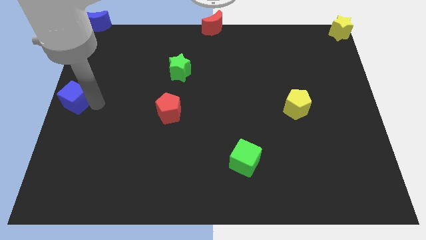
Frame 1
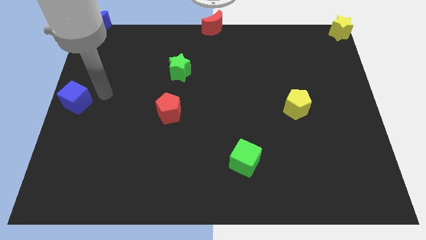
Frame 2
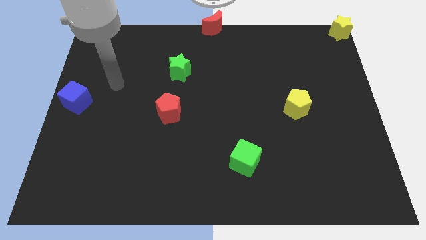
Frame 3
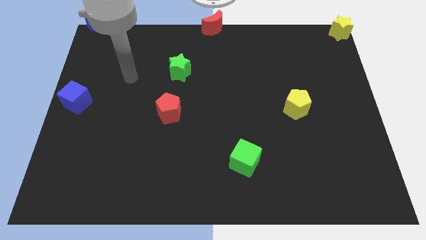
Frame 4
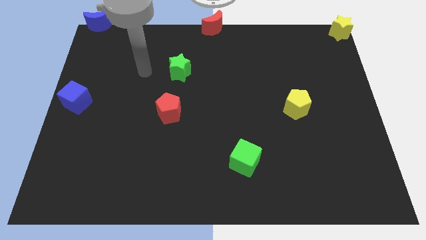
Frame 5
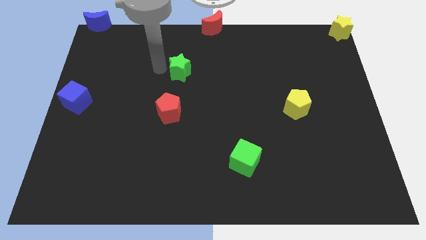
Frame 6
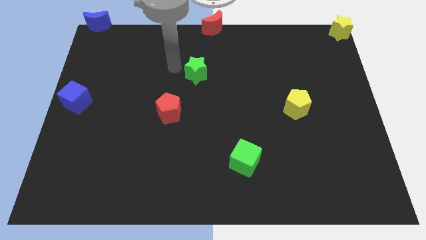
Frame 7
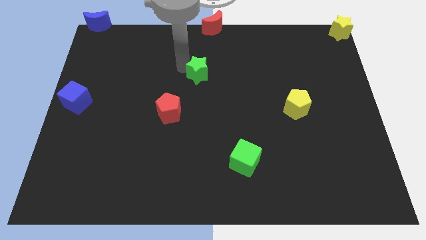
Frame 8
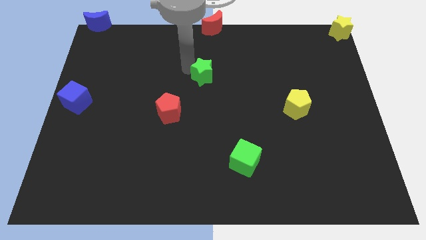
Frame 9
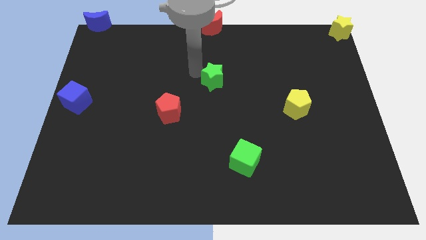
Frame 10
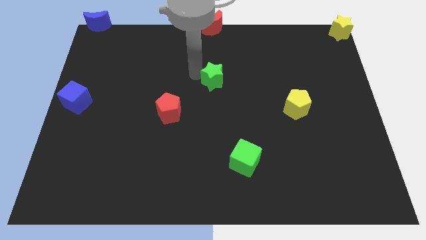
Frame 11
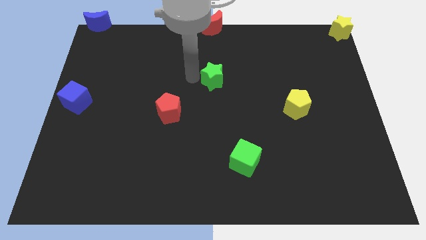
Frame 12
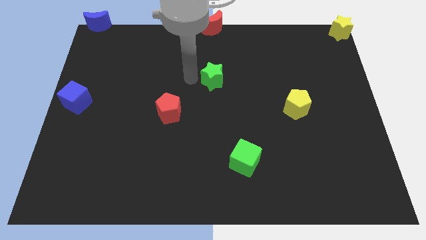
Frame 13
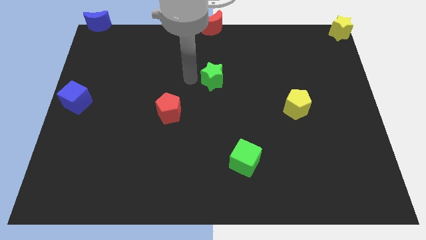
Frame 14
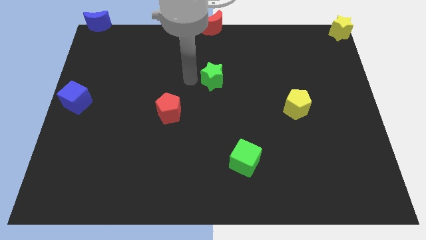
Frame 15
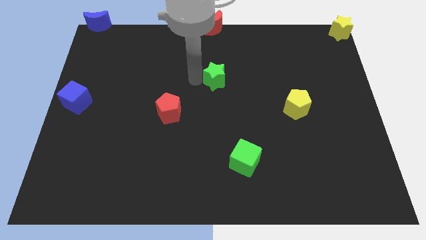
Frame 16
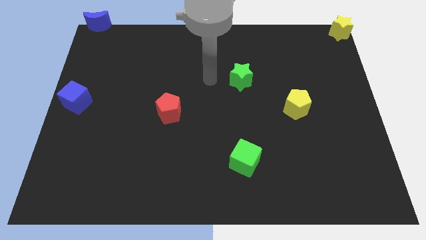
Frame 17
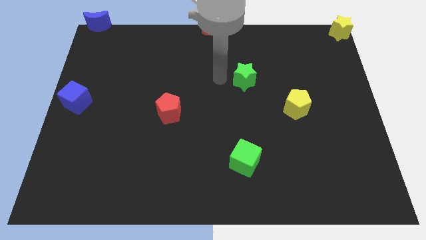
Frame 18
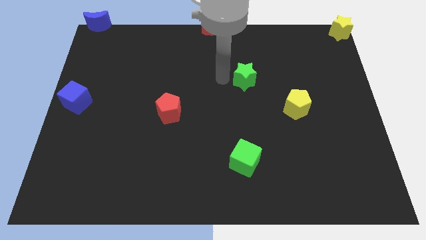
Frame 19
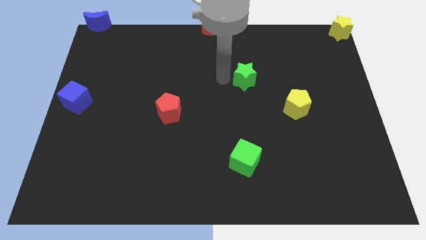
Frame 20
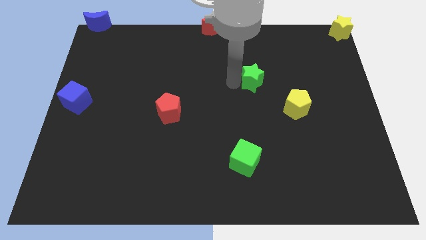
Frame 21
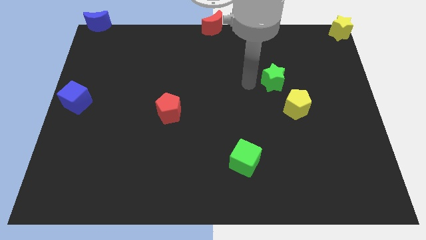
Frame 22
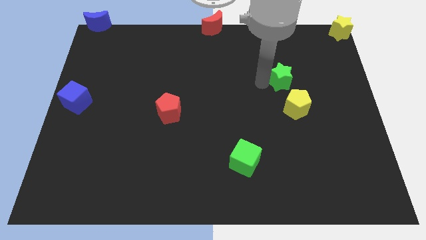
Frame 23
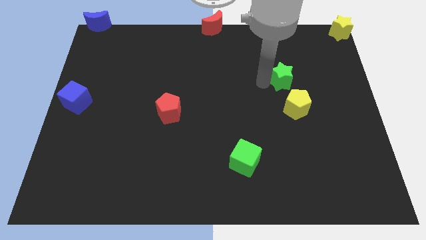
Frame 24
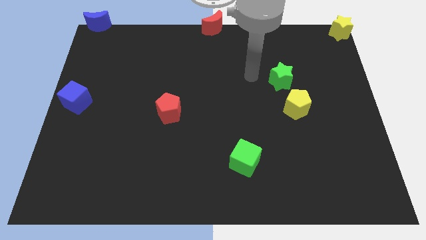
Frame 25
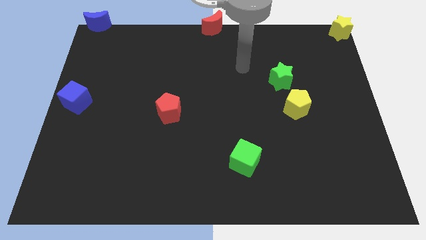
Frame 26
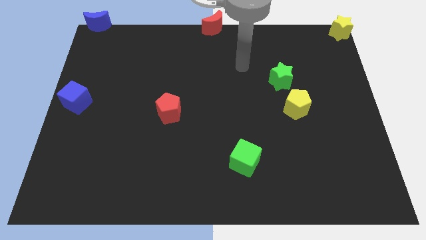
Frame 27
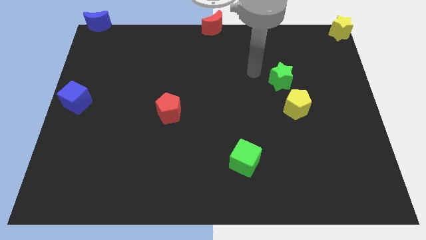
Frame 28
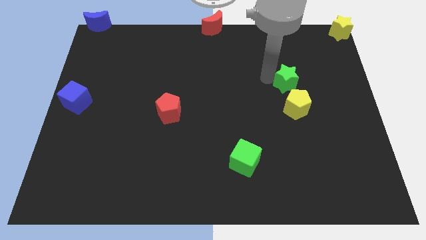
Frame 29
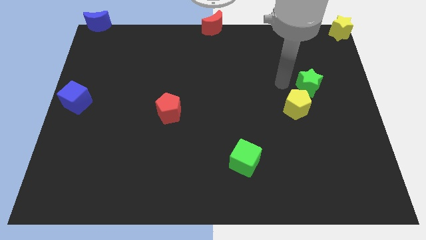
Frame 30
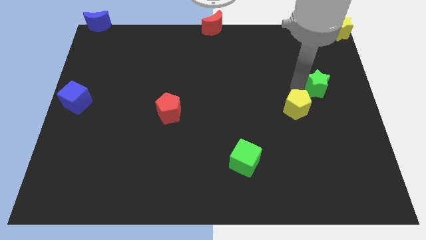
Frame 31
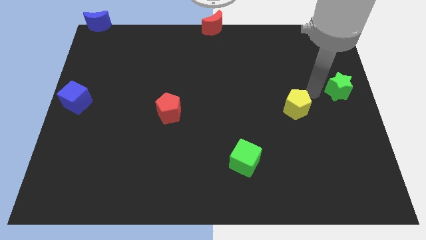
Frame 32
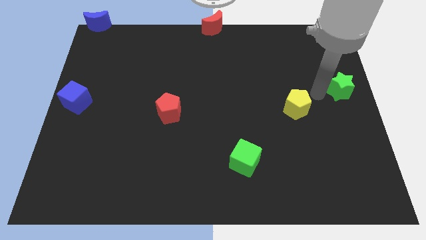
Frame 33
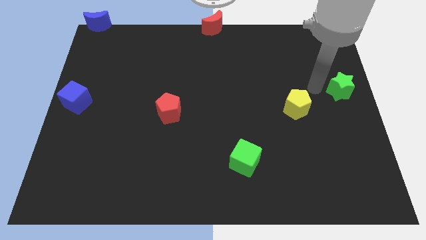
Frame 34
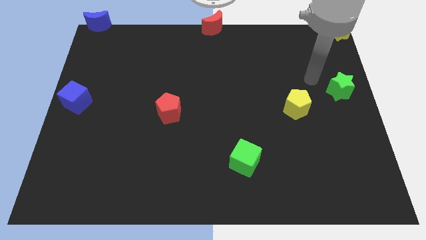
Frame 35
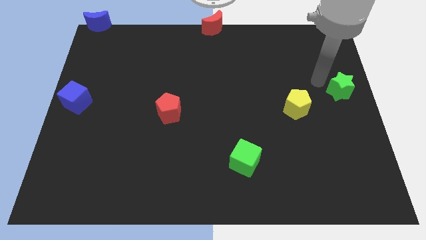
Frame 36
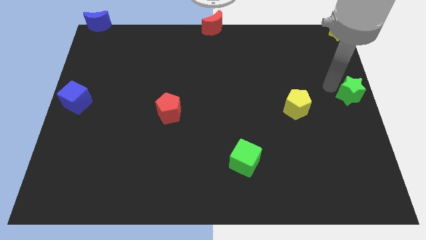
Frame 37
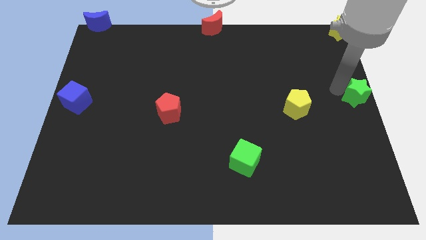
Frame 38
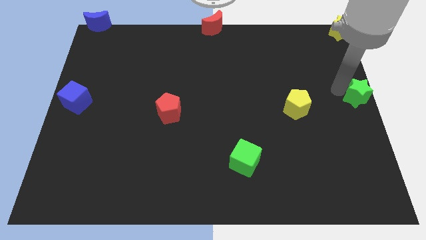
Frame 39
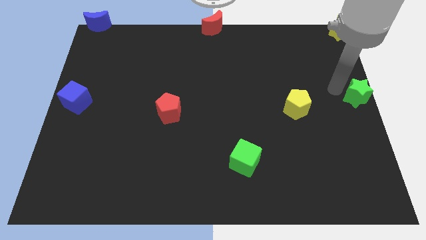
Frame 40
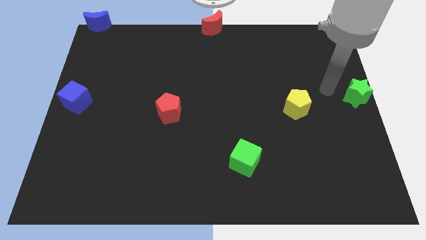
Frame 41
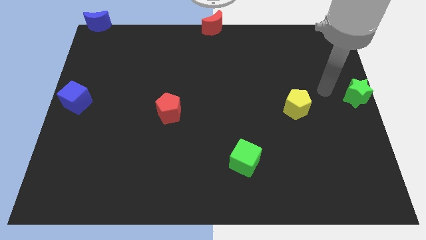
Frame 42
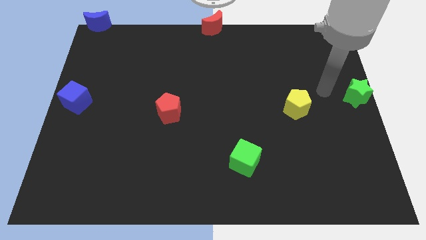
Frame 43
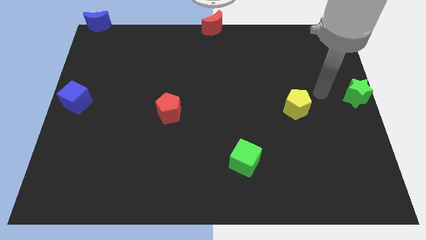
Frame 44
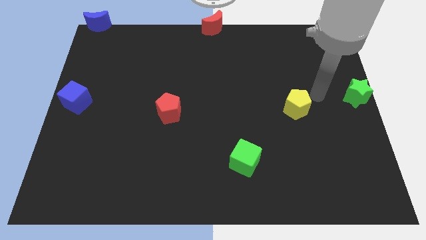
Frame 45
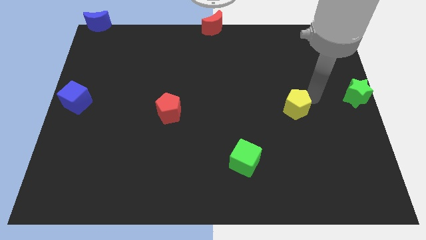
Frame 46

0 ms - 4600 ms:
move the green star to the right center of the board

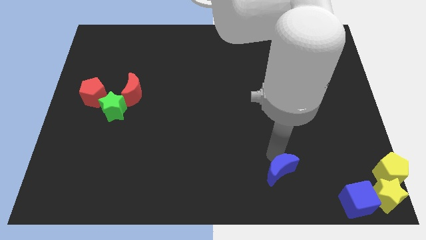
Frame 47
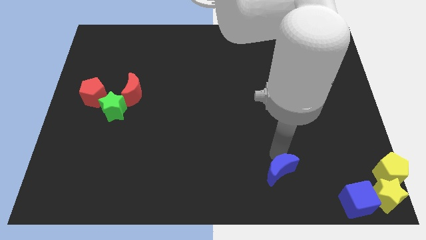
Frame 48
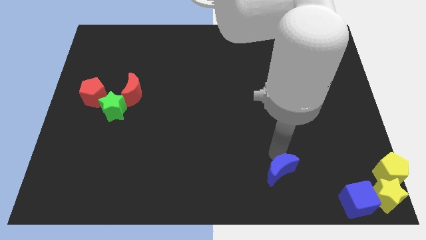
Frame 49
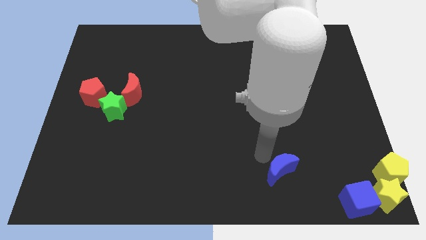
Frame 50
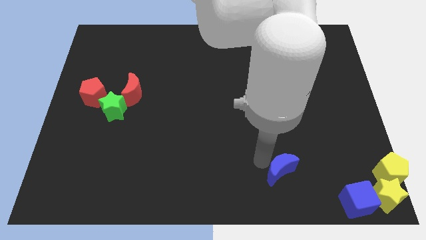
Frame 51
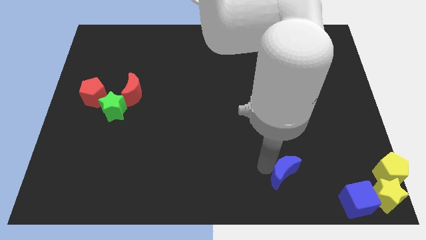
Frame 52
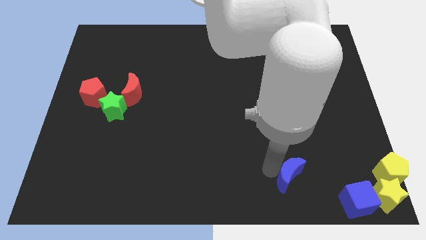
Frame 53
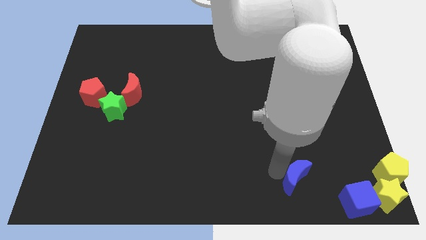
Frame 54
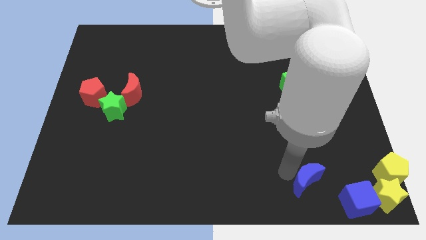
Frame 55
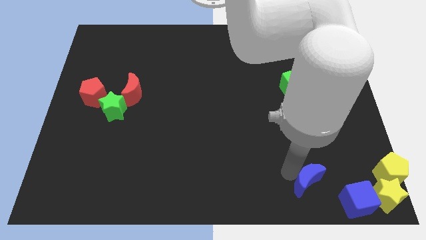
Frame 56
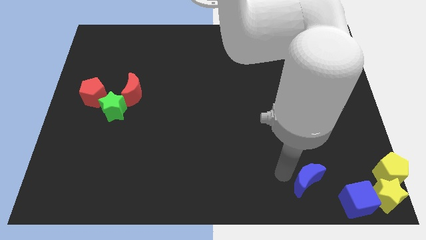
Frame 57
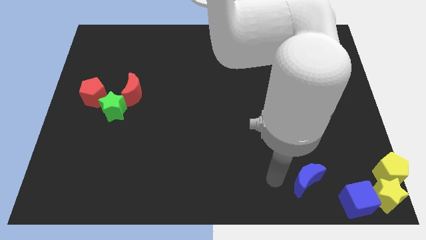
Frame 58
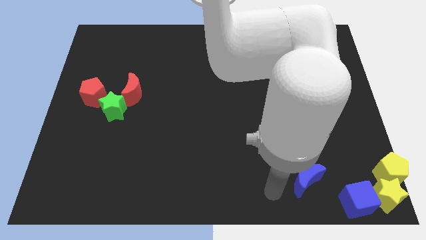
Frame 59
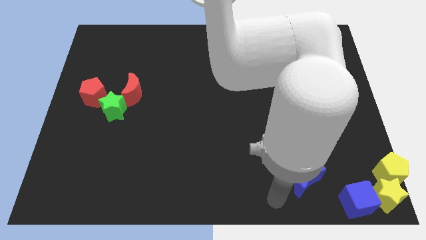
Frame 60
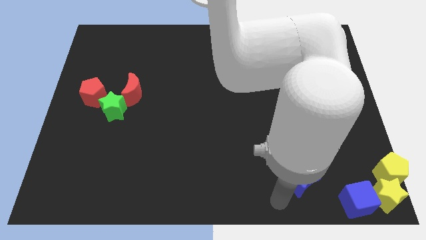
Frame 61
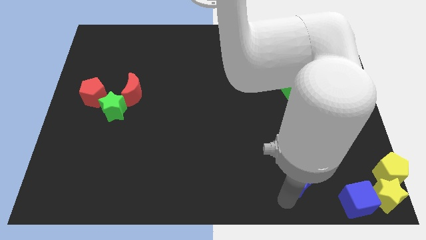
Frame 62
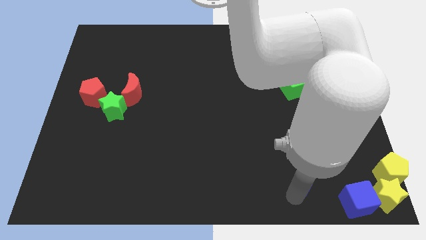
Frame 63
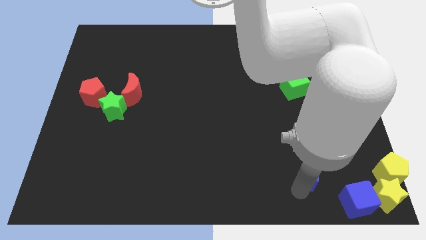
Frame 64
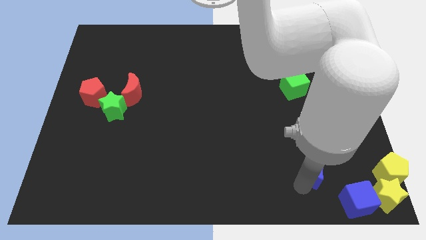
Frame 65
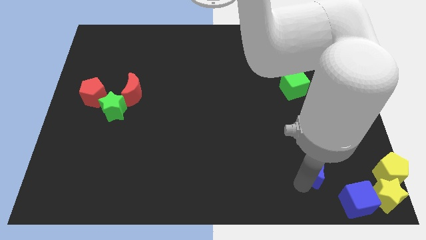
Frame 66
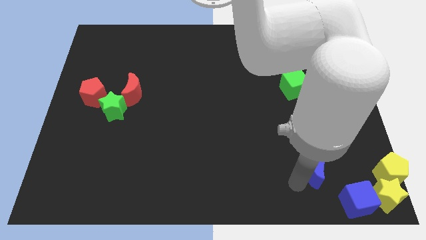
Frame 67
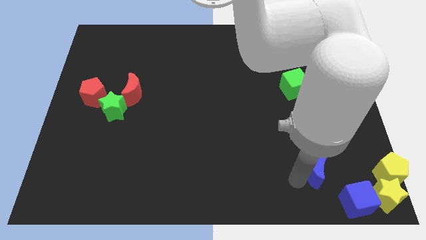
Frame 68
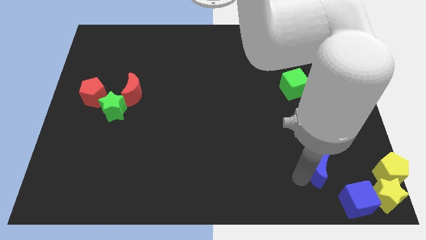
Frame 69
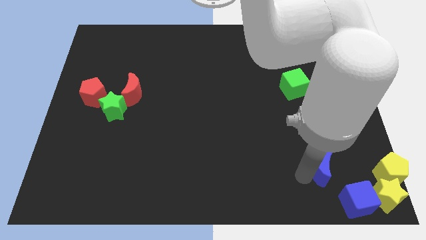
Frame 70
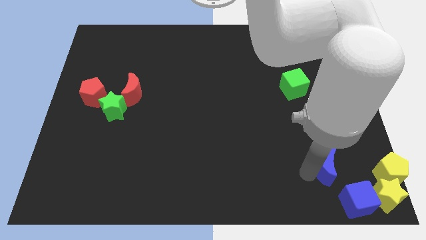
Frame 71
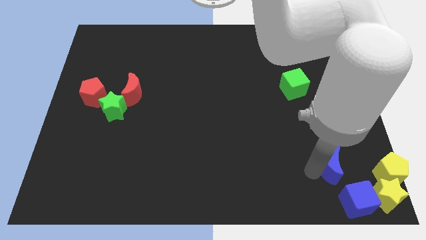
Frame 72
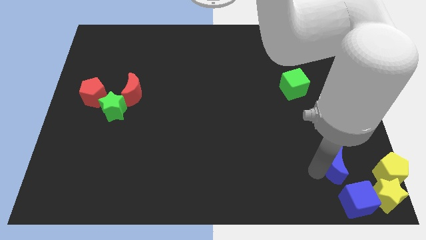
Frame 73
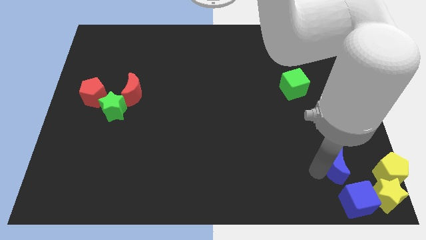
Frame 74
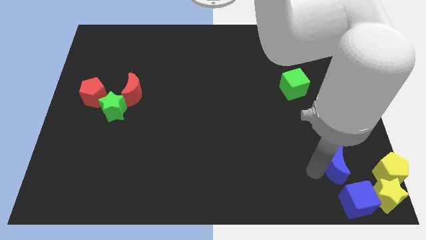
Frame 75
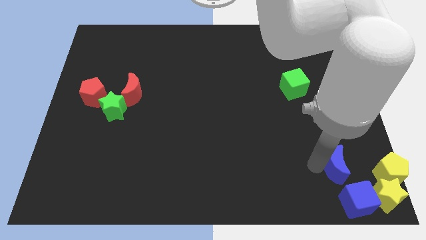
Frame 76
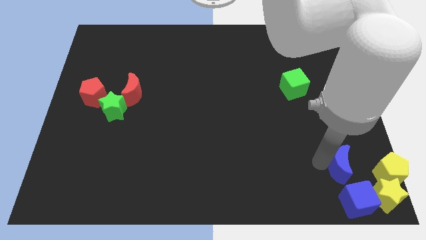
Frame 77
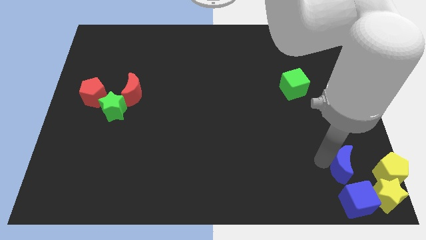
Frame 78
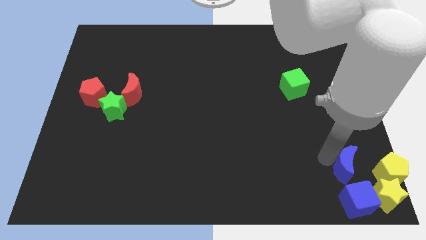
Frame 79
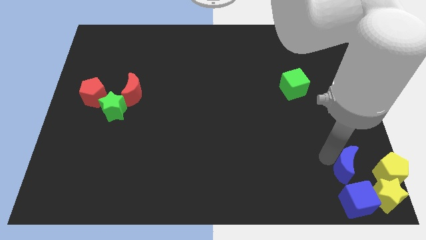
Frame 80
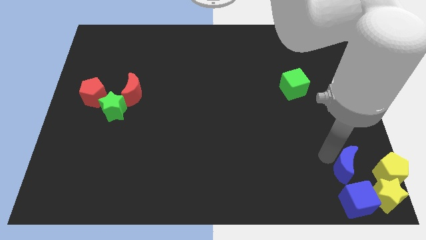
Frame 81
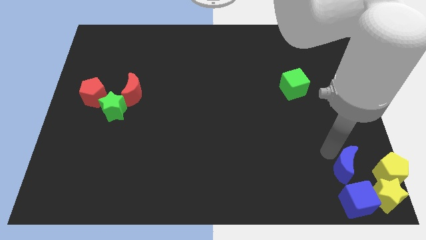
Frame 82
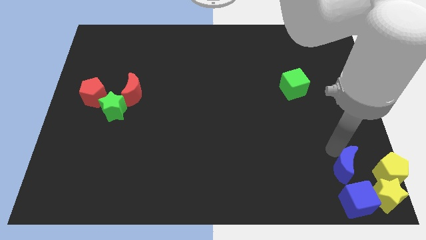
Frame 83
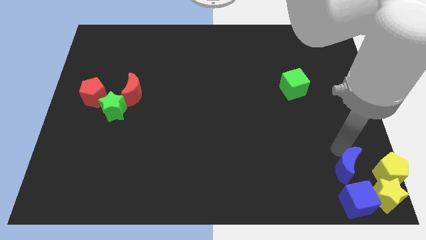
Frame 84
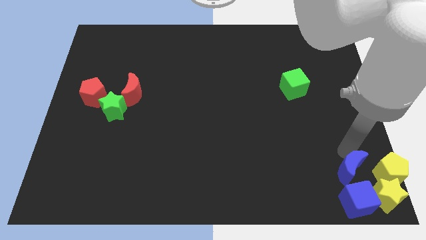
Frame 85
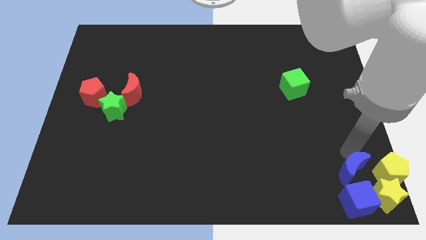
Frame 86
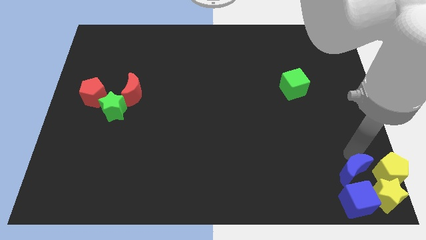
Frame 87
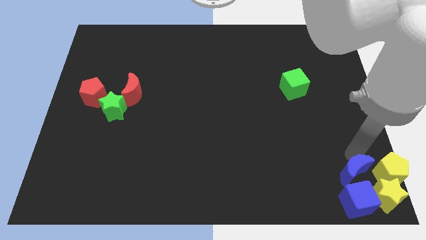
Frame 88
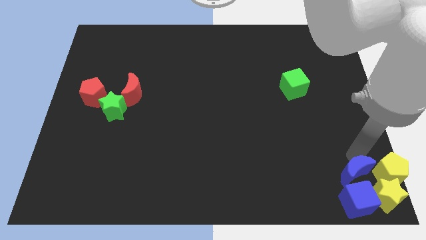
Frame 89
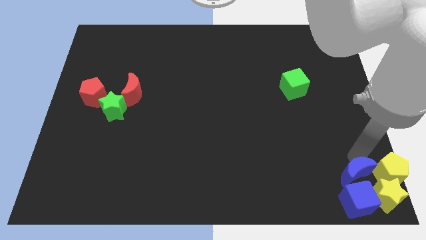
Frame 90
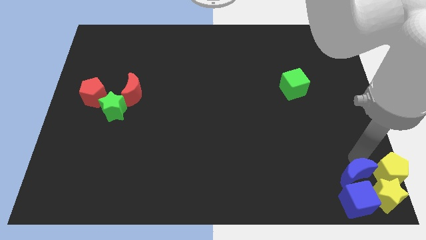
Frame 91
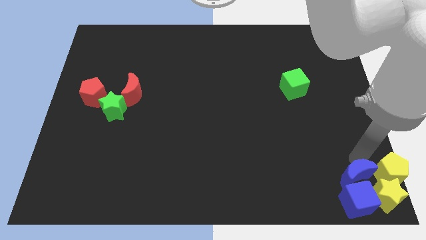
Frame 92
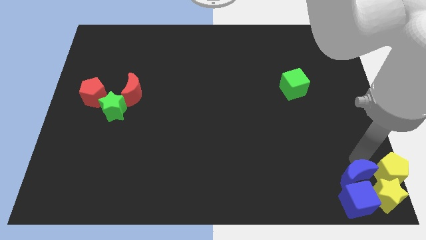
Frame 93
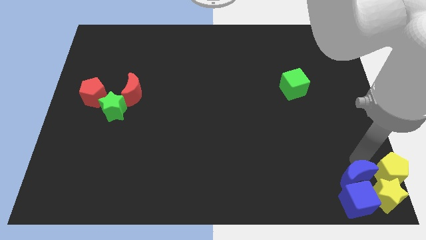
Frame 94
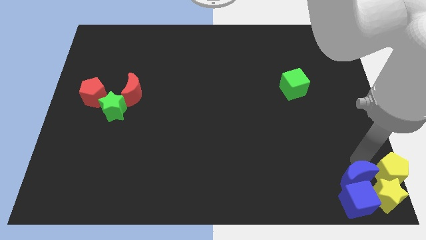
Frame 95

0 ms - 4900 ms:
move the blue crescent above the blue cube
